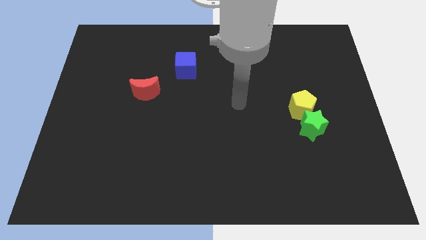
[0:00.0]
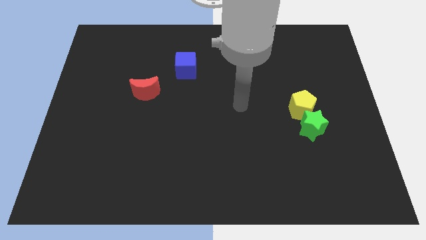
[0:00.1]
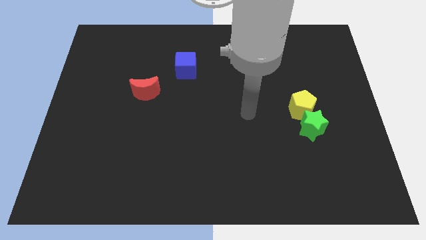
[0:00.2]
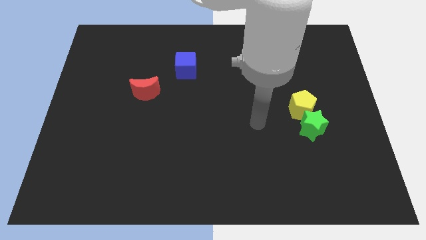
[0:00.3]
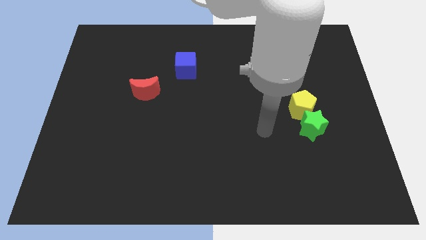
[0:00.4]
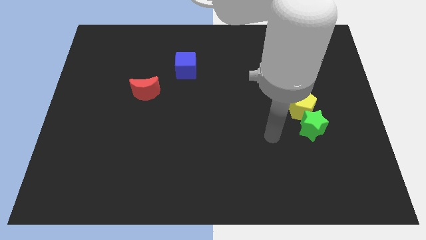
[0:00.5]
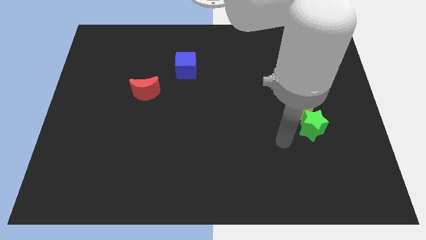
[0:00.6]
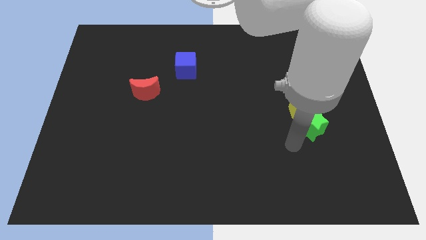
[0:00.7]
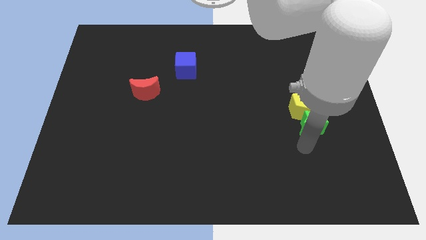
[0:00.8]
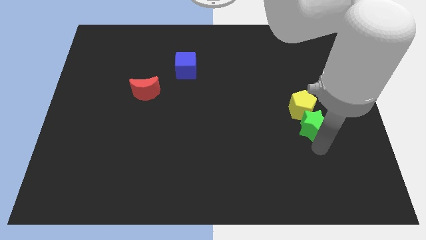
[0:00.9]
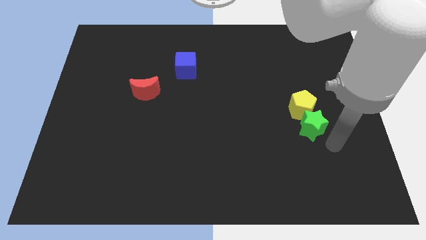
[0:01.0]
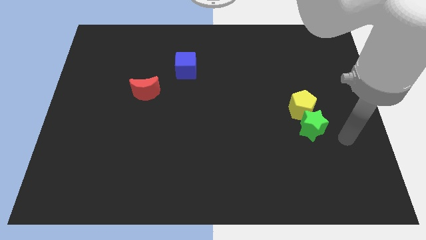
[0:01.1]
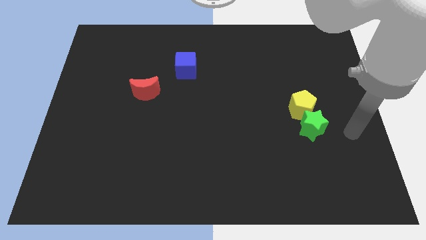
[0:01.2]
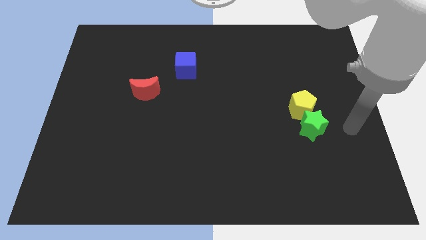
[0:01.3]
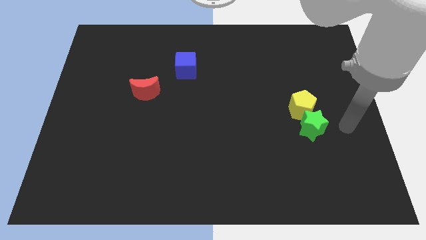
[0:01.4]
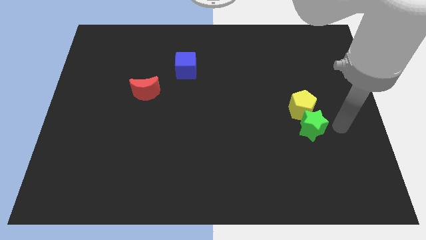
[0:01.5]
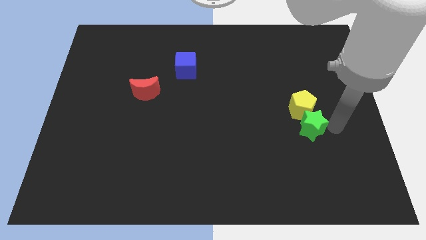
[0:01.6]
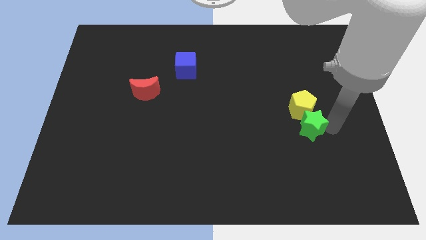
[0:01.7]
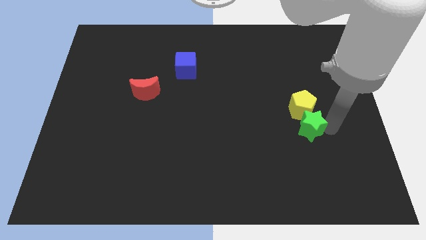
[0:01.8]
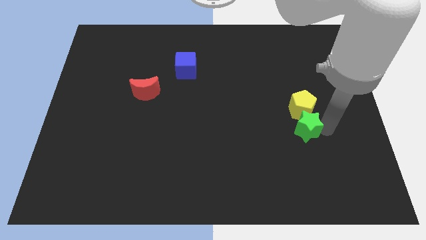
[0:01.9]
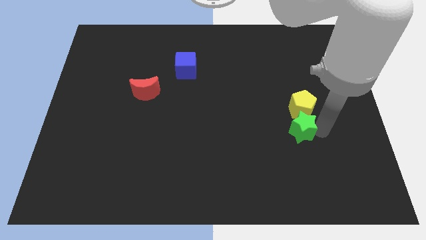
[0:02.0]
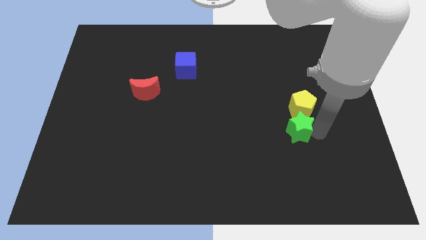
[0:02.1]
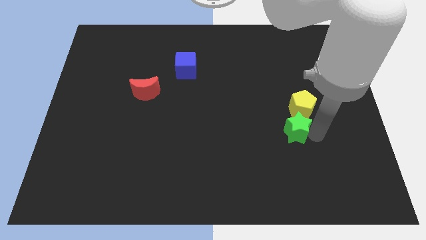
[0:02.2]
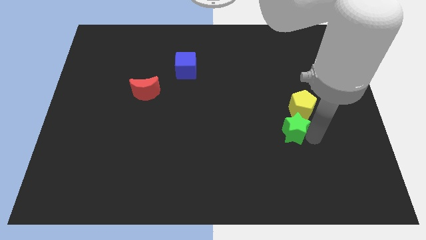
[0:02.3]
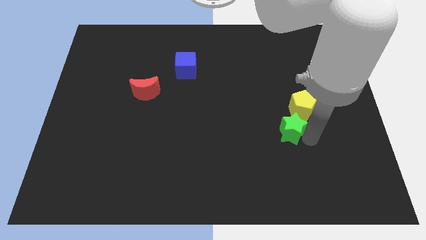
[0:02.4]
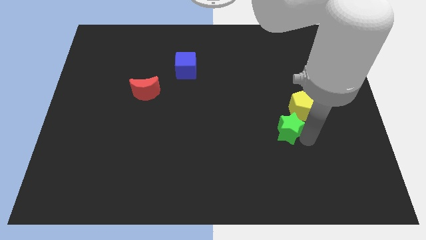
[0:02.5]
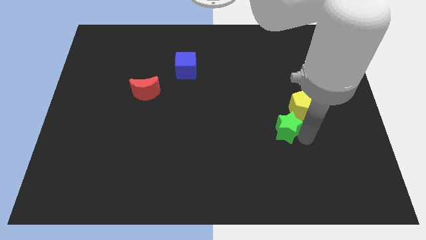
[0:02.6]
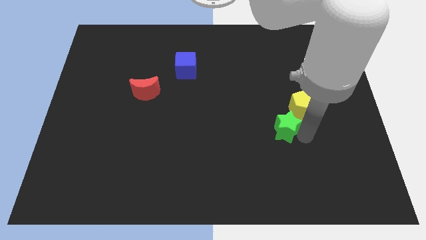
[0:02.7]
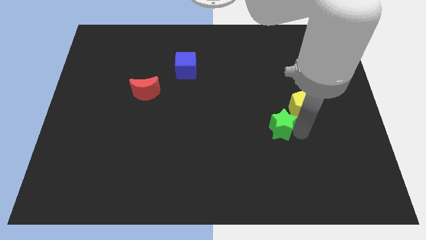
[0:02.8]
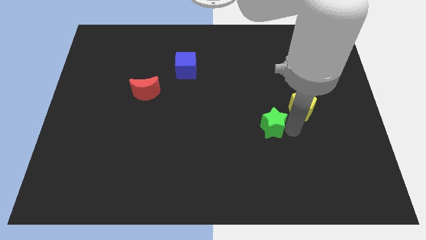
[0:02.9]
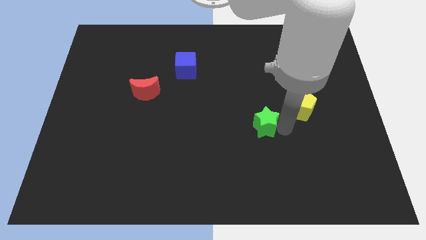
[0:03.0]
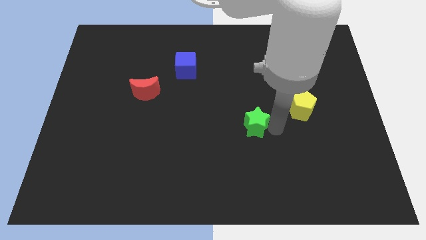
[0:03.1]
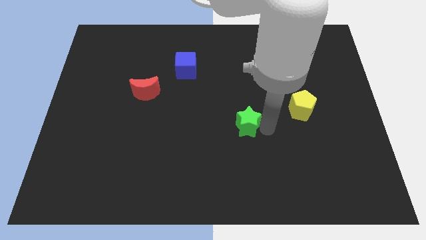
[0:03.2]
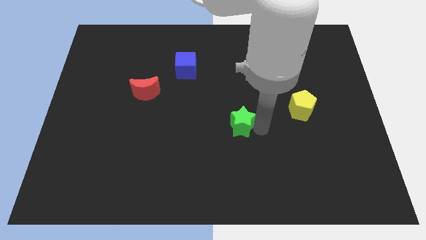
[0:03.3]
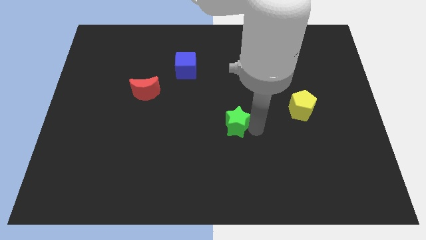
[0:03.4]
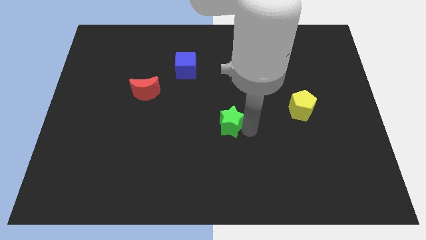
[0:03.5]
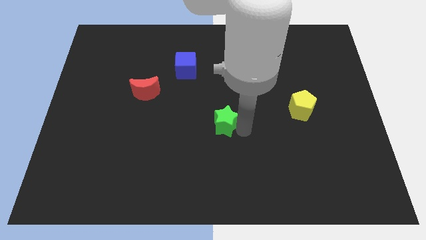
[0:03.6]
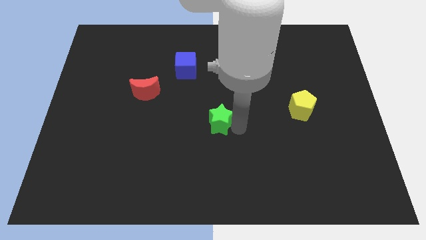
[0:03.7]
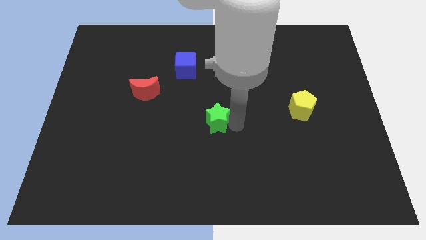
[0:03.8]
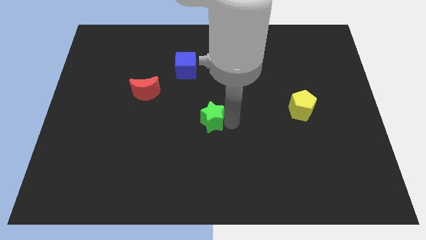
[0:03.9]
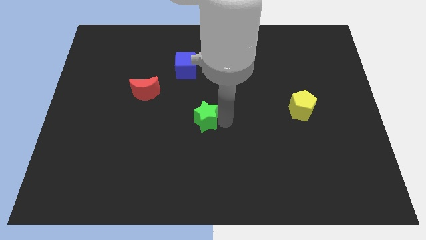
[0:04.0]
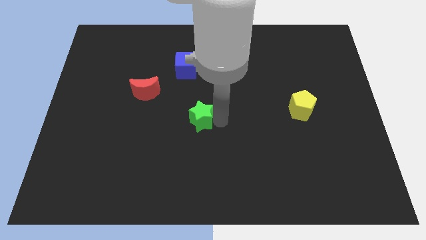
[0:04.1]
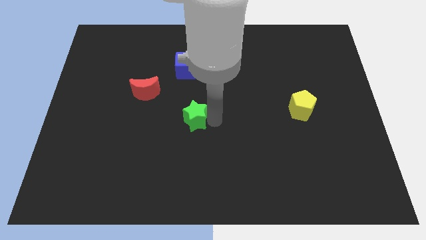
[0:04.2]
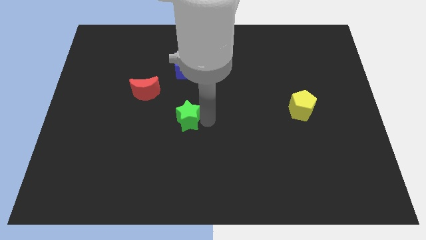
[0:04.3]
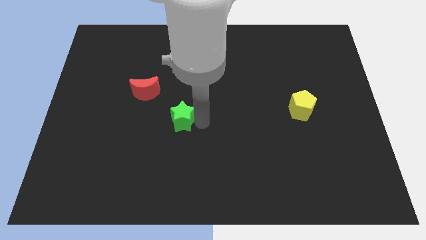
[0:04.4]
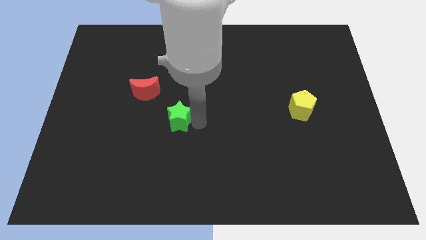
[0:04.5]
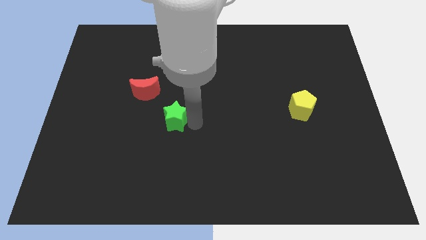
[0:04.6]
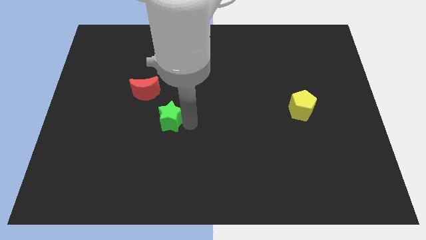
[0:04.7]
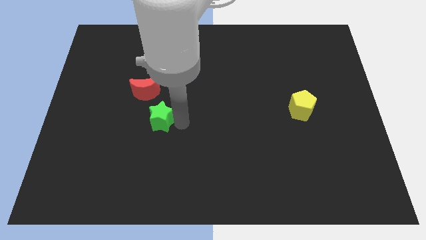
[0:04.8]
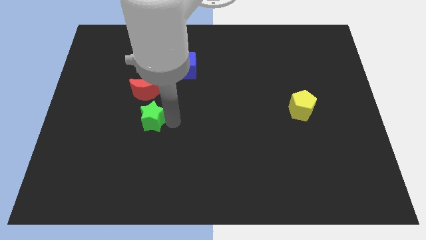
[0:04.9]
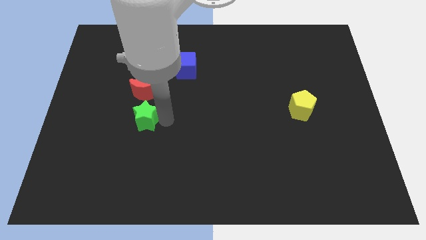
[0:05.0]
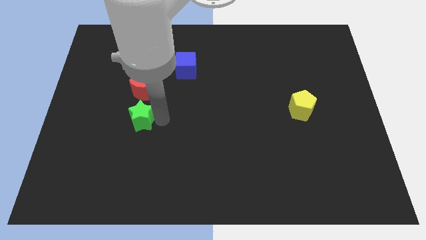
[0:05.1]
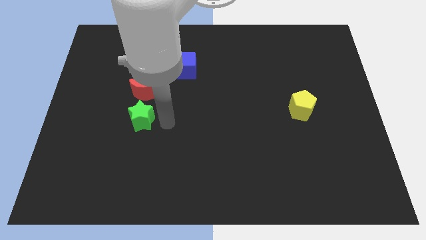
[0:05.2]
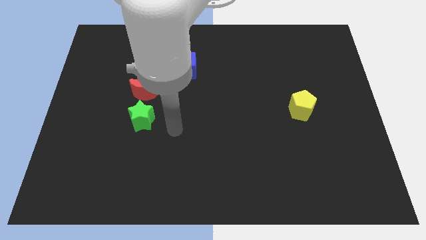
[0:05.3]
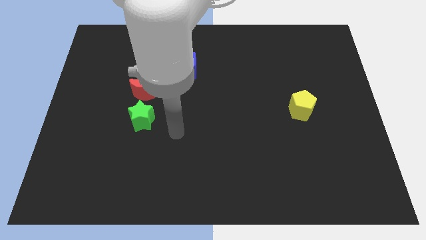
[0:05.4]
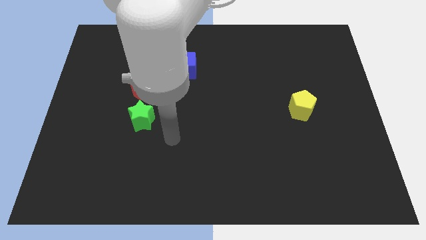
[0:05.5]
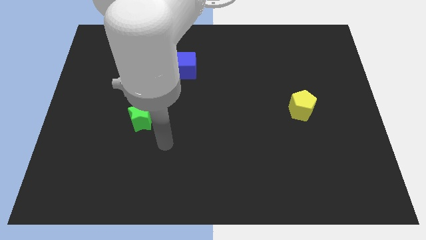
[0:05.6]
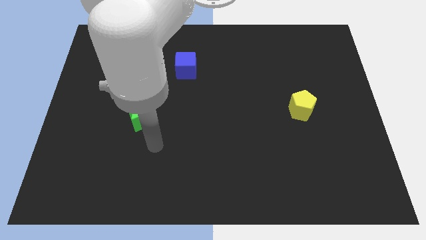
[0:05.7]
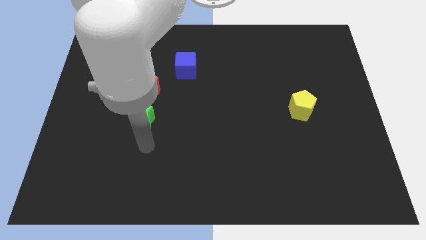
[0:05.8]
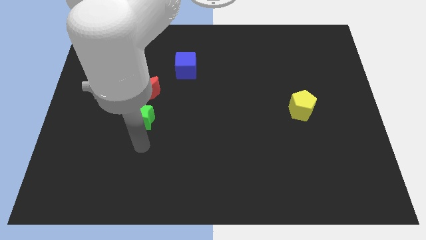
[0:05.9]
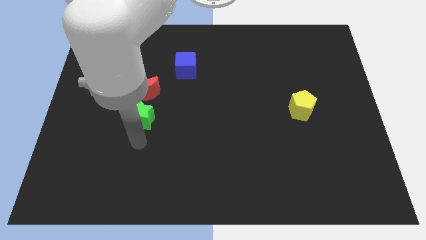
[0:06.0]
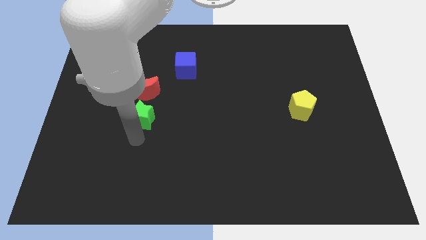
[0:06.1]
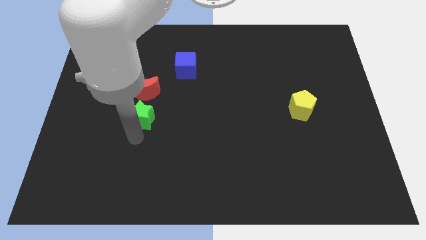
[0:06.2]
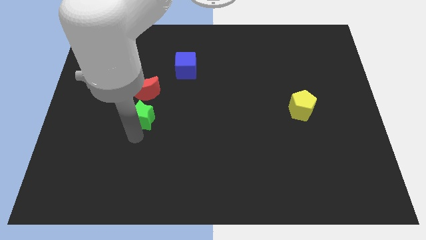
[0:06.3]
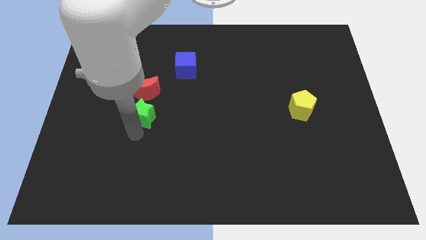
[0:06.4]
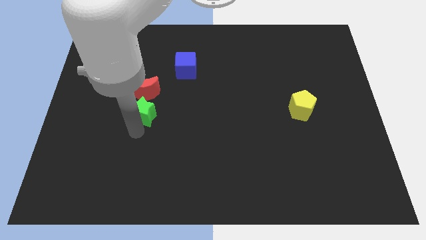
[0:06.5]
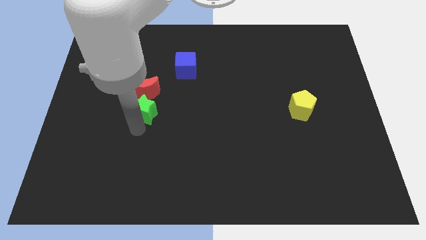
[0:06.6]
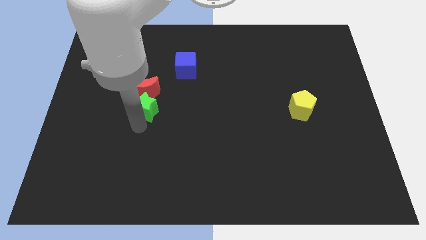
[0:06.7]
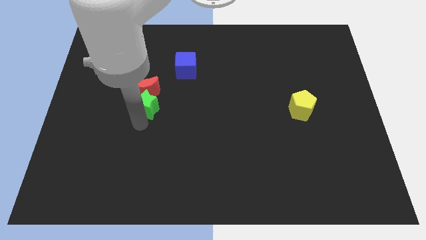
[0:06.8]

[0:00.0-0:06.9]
slide the star to the moon

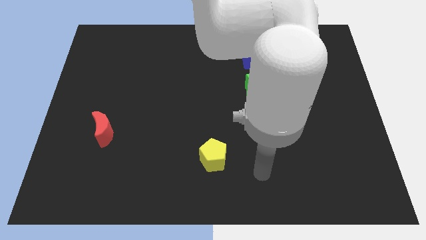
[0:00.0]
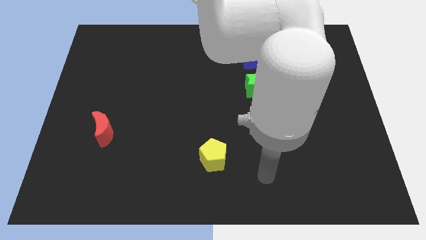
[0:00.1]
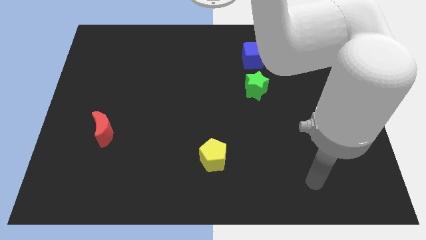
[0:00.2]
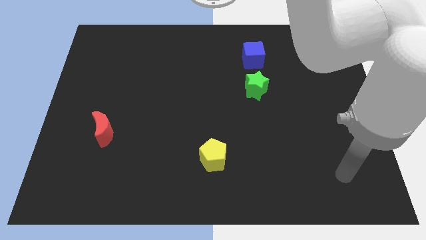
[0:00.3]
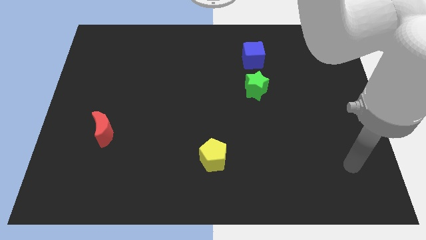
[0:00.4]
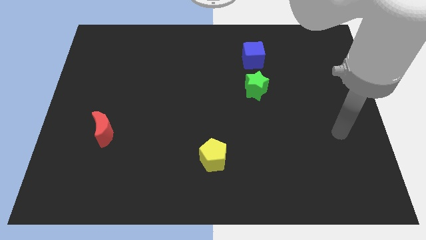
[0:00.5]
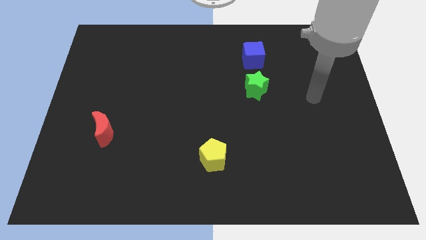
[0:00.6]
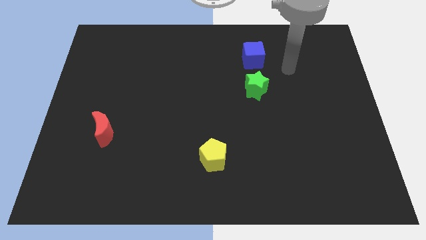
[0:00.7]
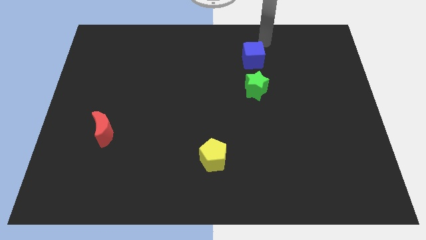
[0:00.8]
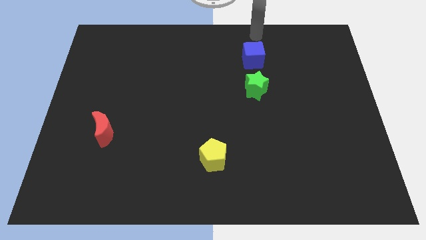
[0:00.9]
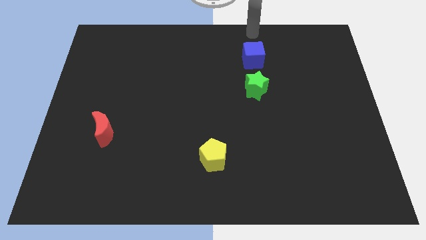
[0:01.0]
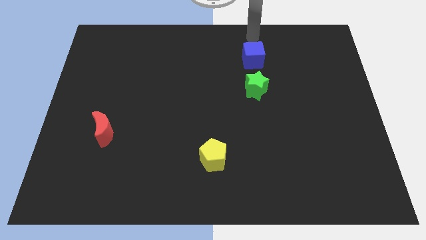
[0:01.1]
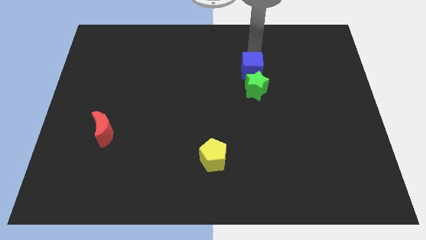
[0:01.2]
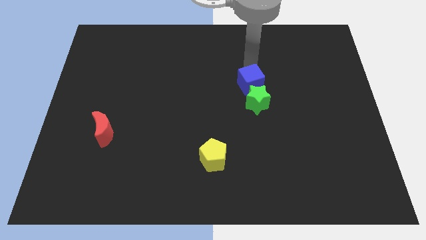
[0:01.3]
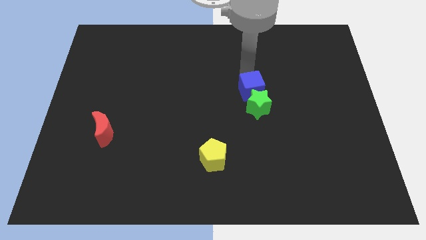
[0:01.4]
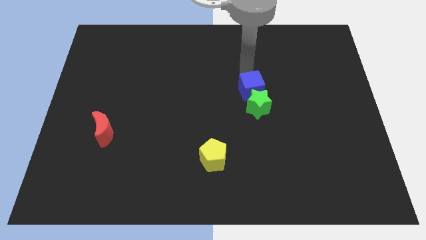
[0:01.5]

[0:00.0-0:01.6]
push the blue cube next to the green block

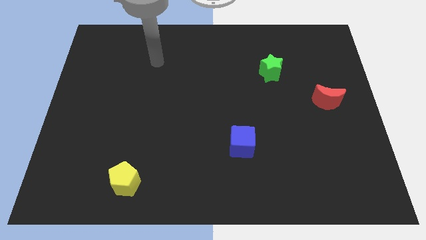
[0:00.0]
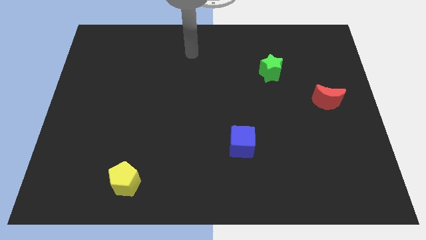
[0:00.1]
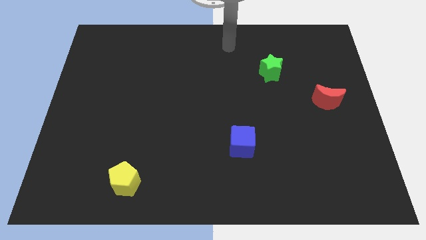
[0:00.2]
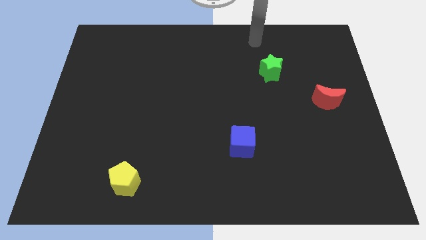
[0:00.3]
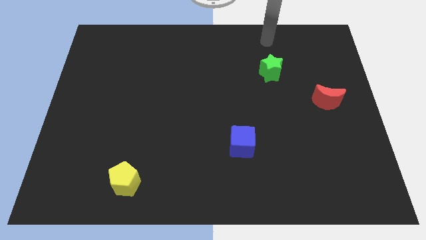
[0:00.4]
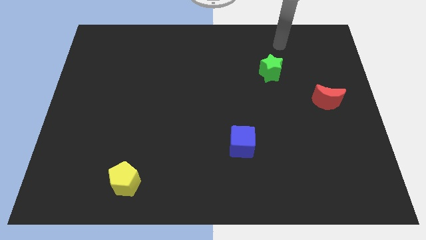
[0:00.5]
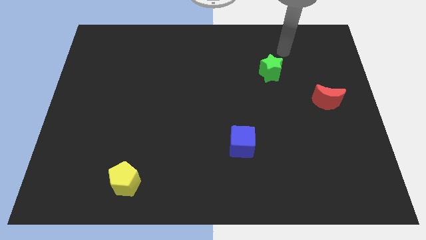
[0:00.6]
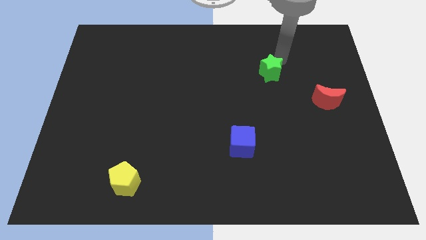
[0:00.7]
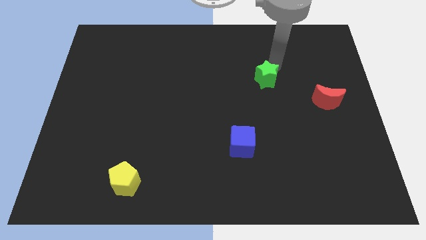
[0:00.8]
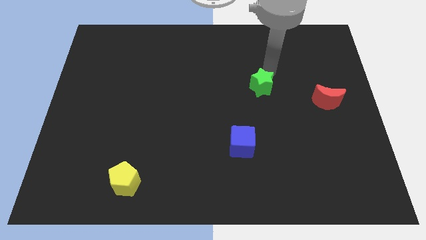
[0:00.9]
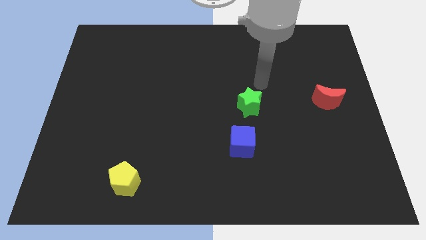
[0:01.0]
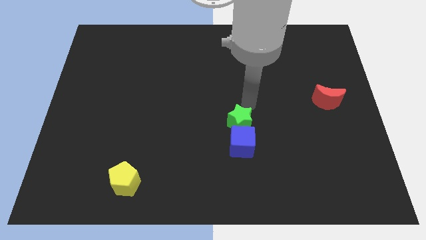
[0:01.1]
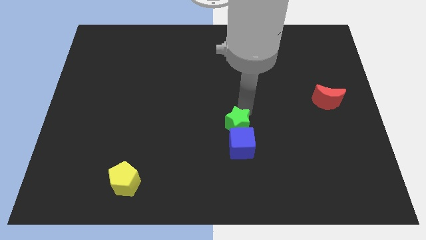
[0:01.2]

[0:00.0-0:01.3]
slide the green block close to the blue cube
